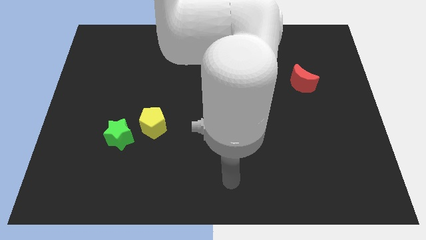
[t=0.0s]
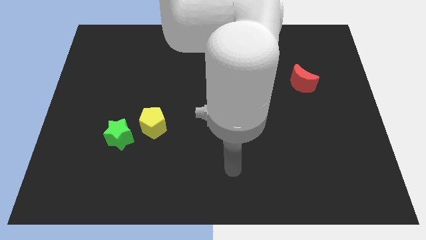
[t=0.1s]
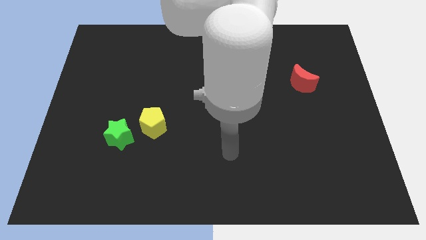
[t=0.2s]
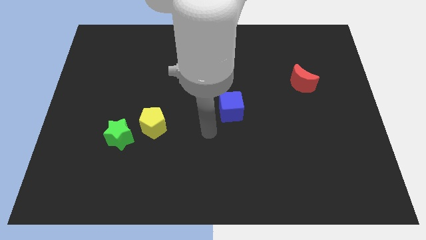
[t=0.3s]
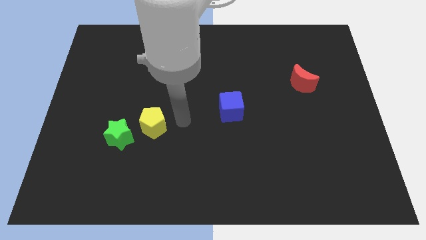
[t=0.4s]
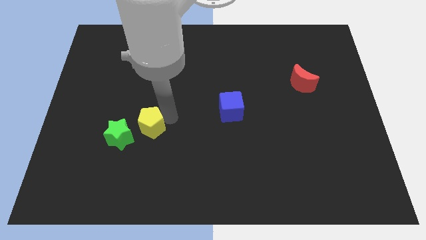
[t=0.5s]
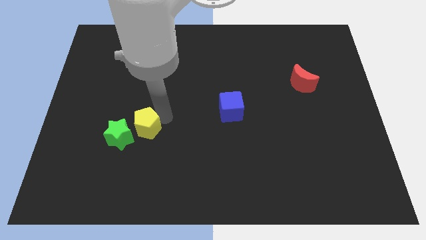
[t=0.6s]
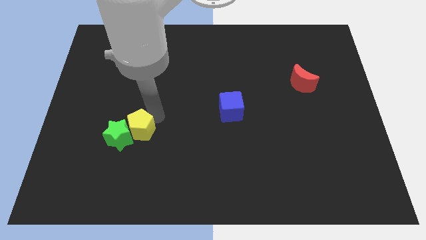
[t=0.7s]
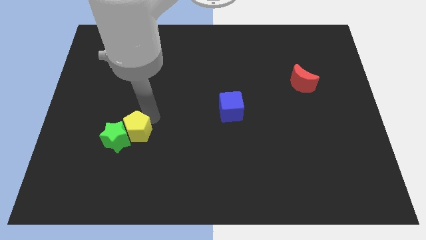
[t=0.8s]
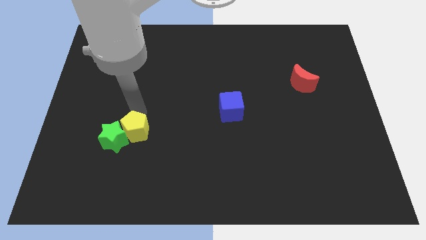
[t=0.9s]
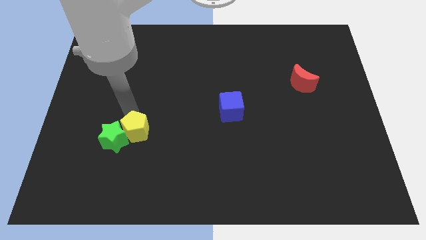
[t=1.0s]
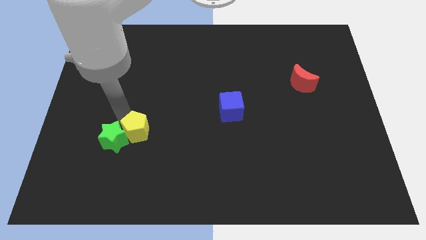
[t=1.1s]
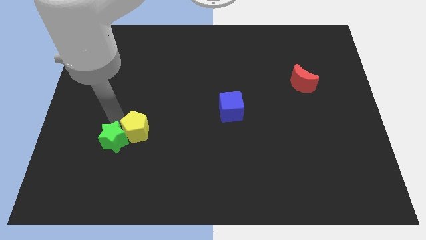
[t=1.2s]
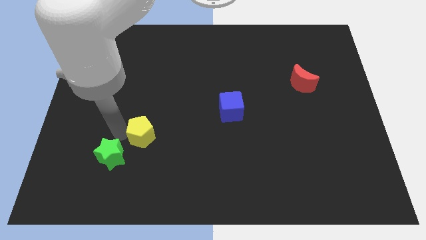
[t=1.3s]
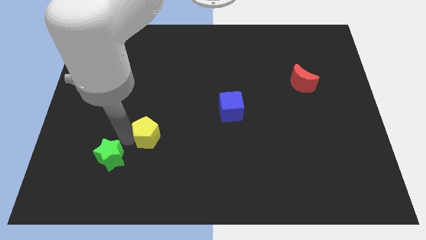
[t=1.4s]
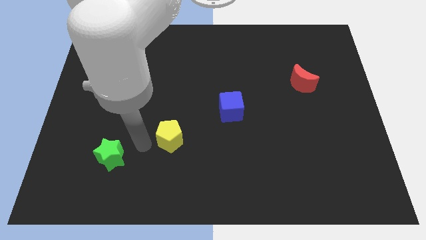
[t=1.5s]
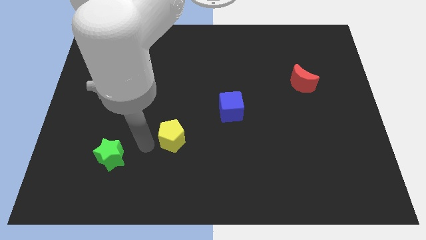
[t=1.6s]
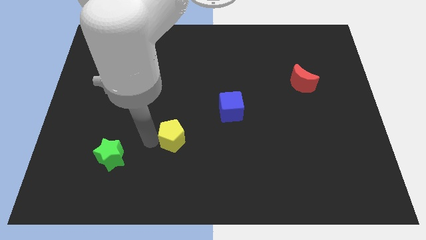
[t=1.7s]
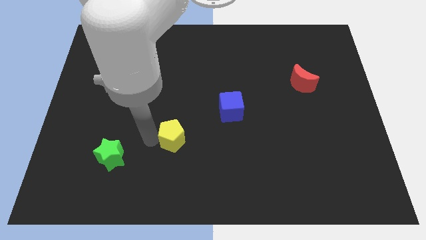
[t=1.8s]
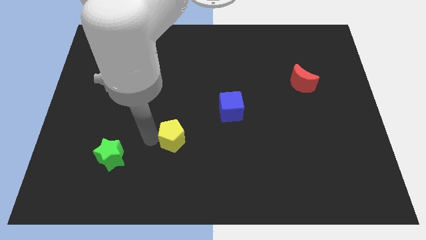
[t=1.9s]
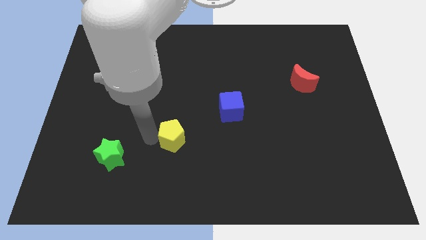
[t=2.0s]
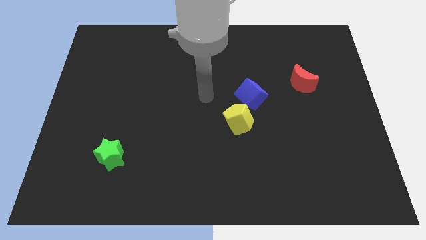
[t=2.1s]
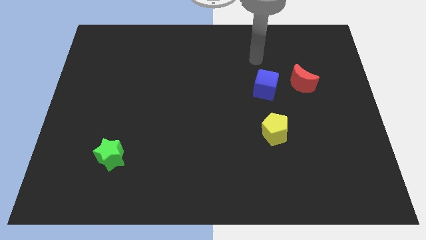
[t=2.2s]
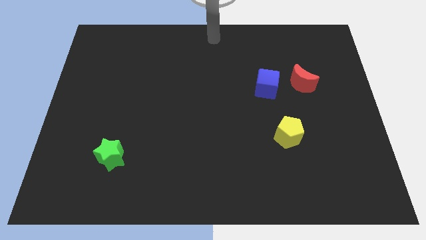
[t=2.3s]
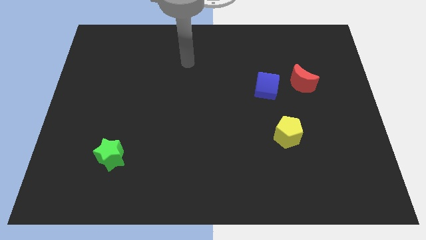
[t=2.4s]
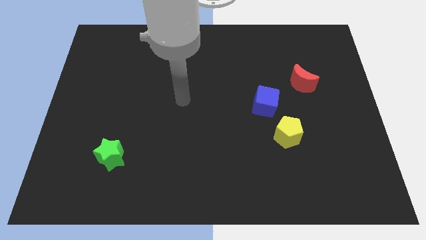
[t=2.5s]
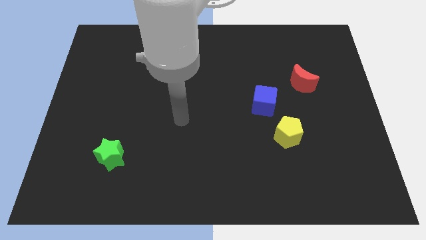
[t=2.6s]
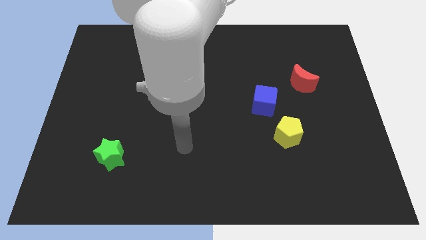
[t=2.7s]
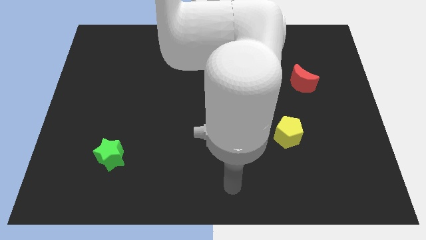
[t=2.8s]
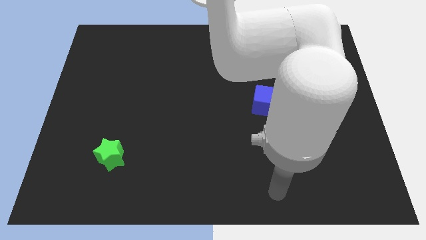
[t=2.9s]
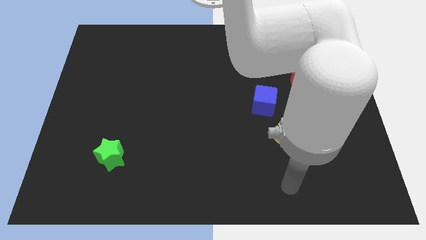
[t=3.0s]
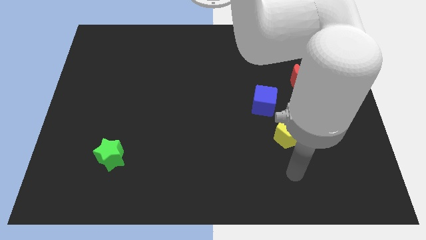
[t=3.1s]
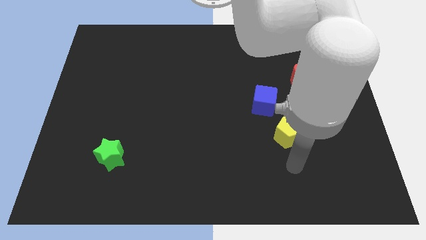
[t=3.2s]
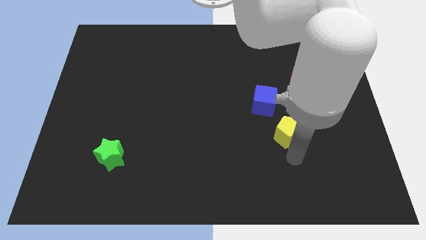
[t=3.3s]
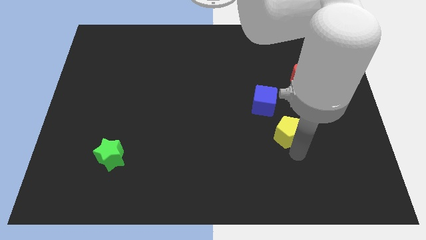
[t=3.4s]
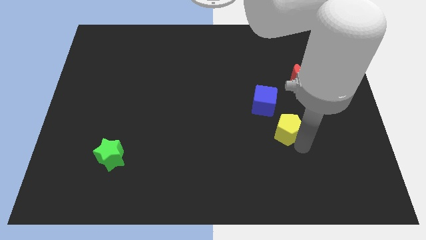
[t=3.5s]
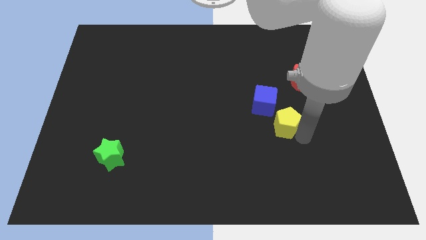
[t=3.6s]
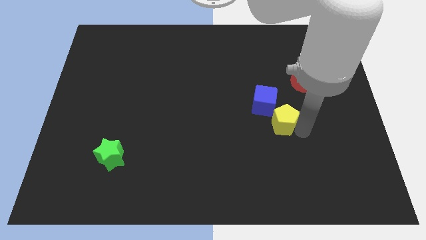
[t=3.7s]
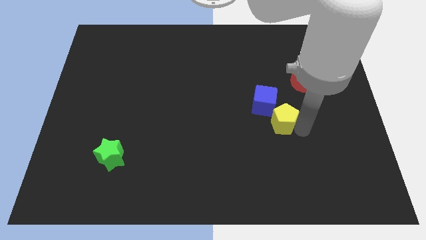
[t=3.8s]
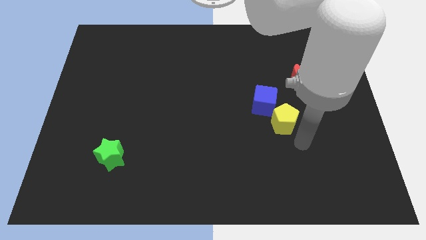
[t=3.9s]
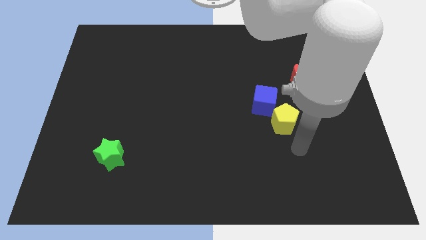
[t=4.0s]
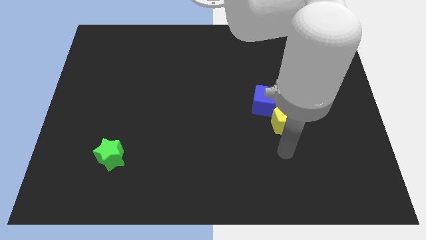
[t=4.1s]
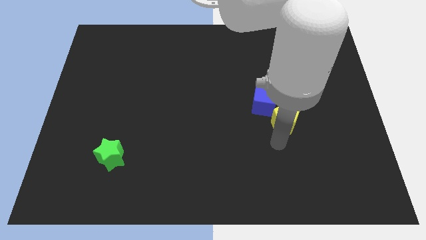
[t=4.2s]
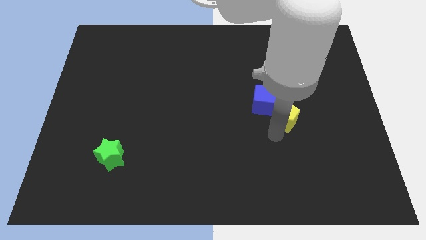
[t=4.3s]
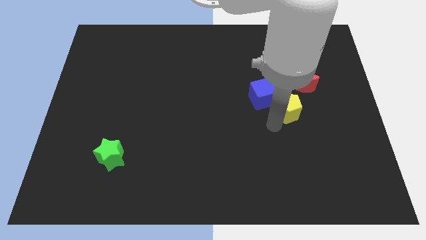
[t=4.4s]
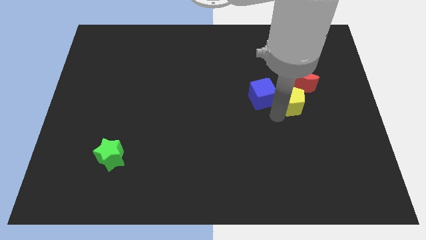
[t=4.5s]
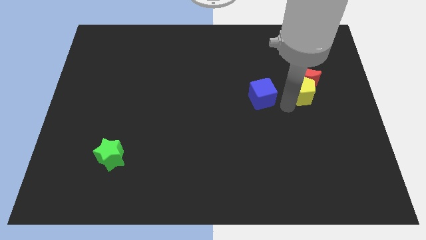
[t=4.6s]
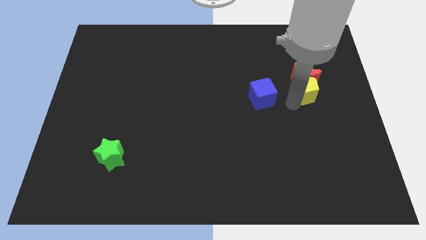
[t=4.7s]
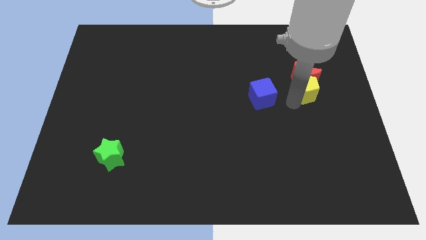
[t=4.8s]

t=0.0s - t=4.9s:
push the yellow block towards the red moon

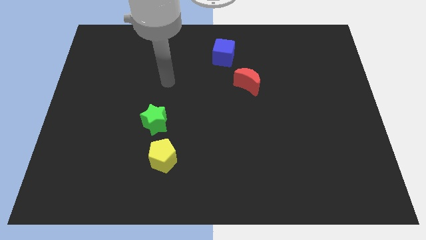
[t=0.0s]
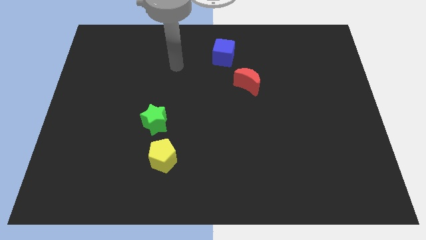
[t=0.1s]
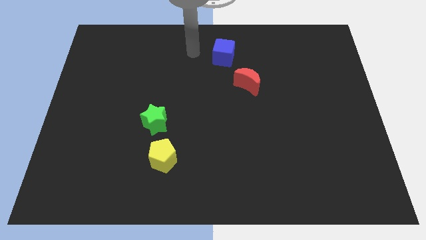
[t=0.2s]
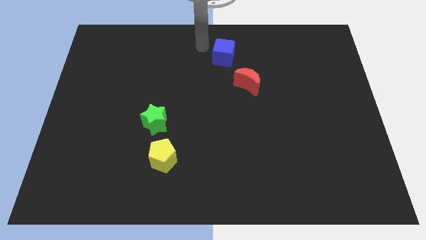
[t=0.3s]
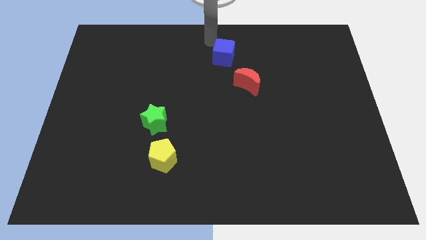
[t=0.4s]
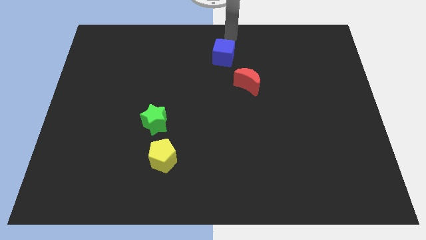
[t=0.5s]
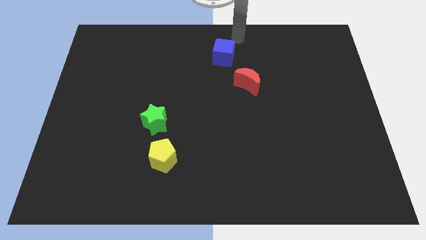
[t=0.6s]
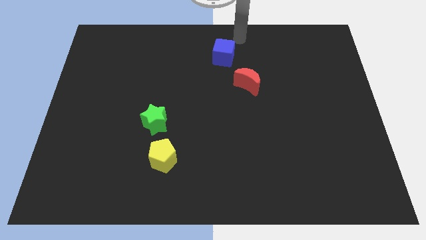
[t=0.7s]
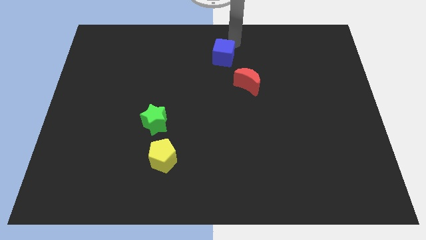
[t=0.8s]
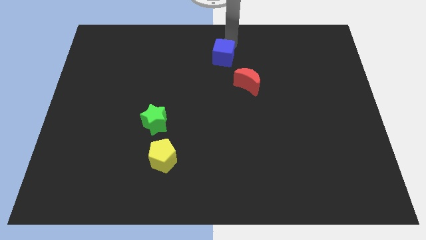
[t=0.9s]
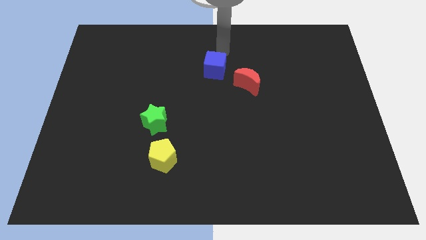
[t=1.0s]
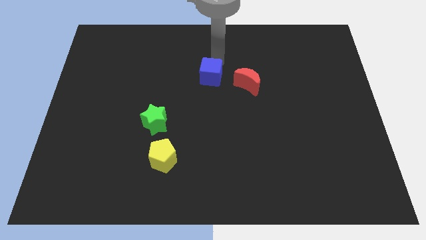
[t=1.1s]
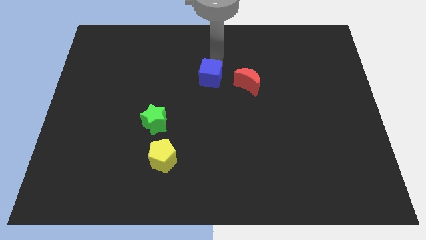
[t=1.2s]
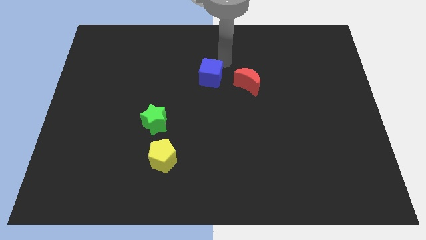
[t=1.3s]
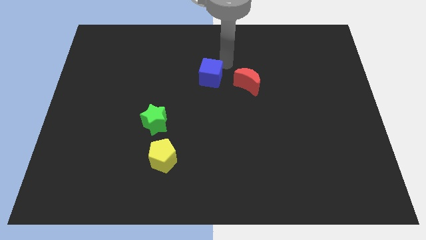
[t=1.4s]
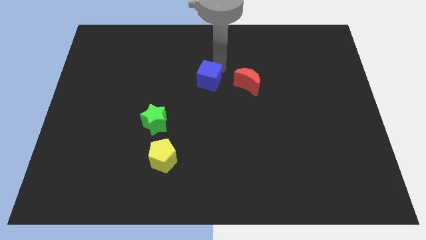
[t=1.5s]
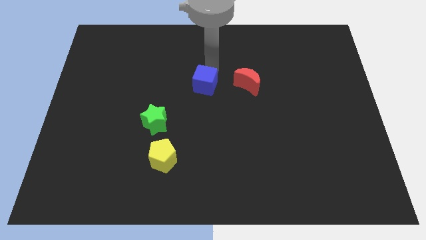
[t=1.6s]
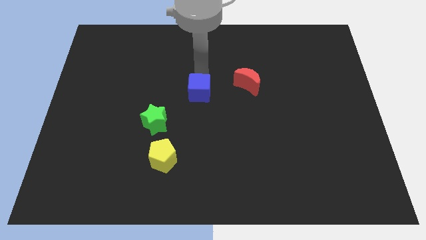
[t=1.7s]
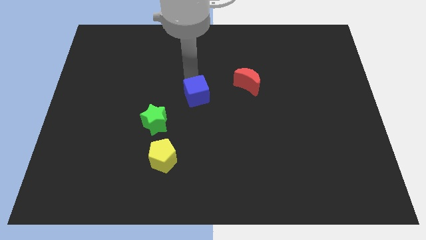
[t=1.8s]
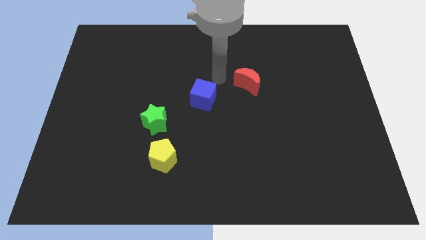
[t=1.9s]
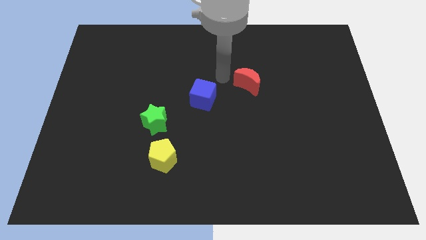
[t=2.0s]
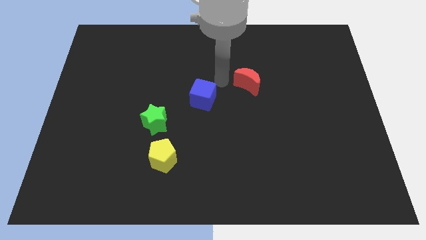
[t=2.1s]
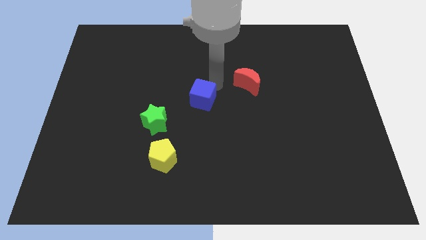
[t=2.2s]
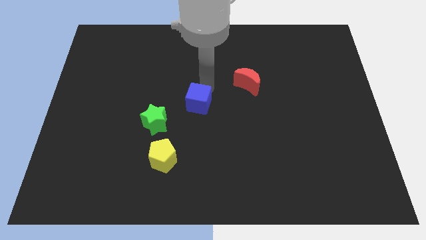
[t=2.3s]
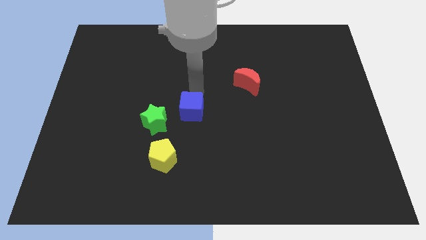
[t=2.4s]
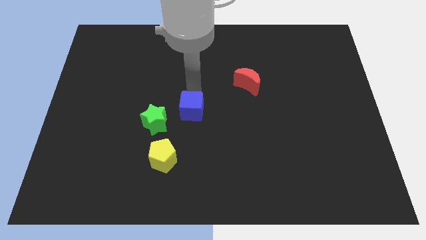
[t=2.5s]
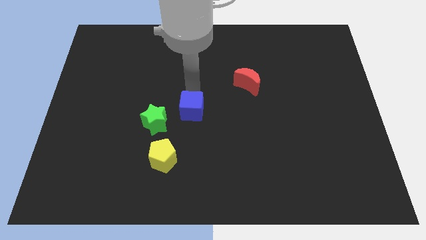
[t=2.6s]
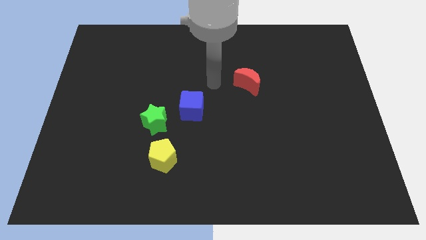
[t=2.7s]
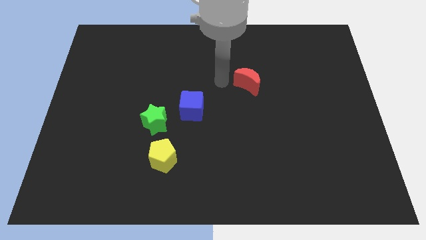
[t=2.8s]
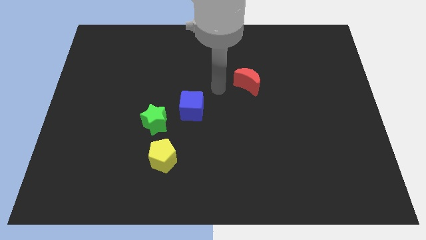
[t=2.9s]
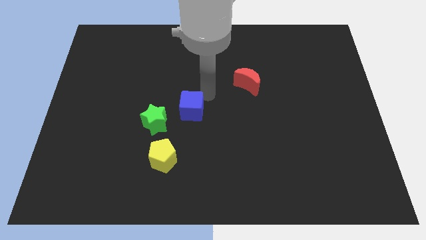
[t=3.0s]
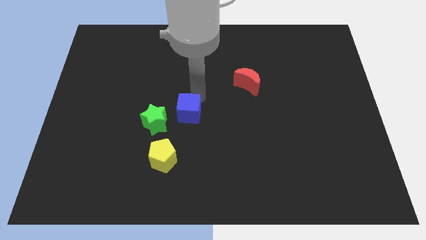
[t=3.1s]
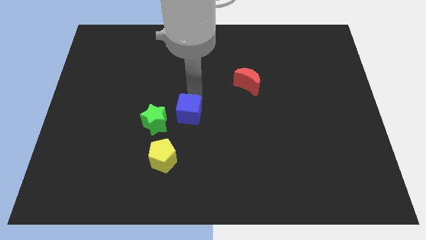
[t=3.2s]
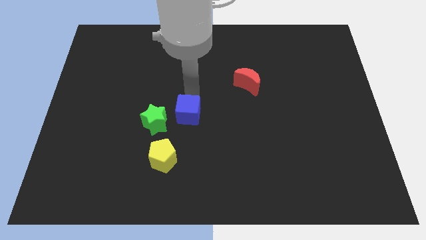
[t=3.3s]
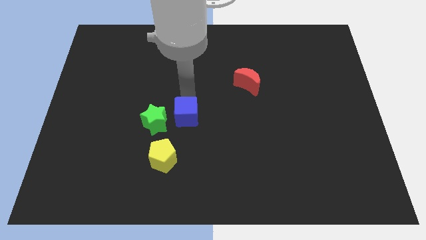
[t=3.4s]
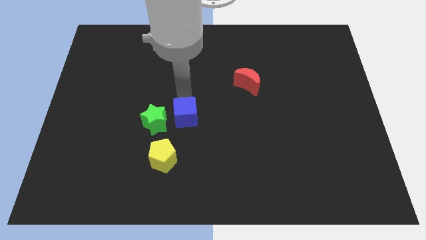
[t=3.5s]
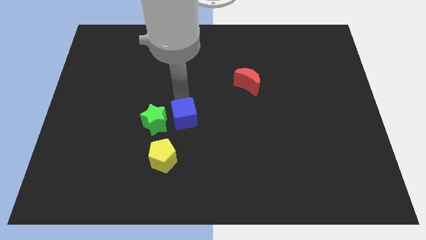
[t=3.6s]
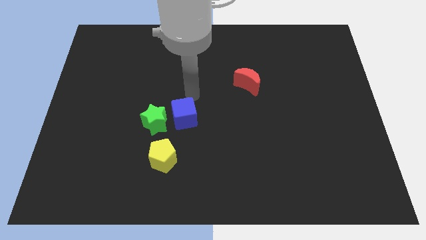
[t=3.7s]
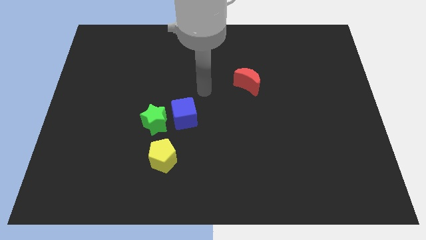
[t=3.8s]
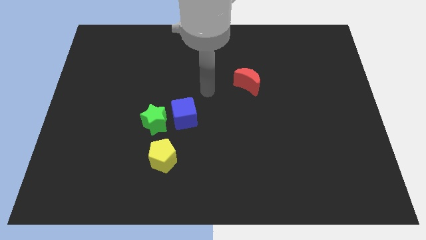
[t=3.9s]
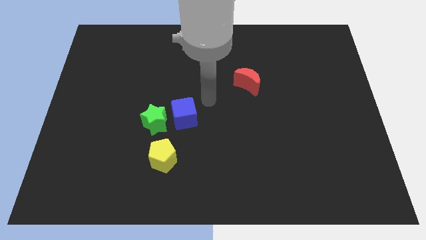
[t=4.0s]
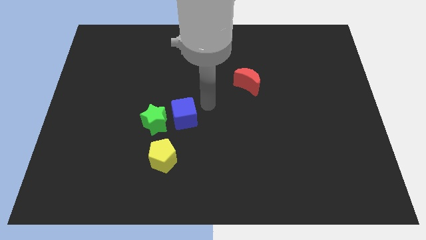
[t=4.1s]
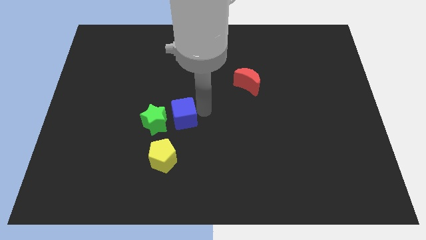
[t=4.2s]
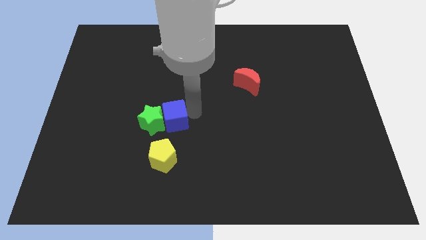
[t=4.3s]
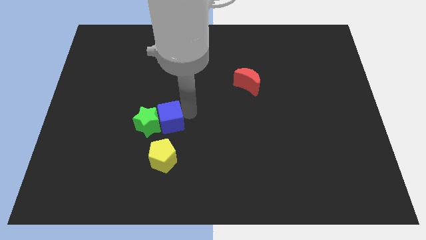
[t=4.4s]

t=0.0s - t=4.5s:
push the blue block next to the green star
